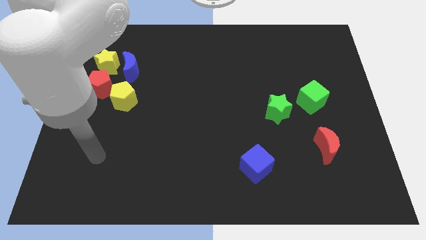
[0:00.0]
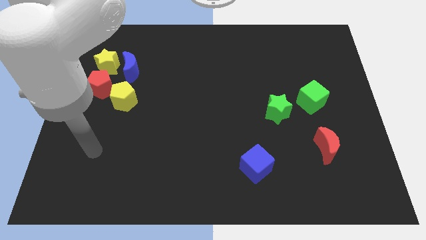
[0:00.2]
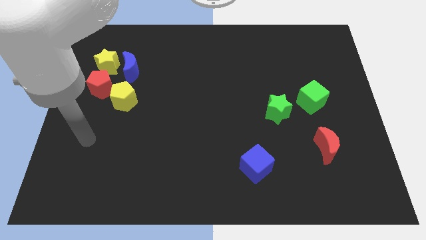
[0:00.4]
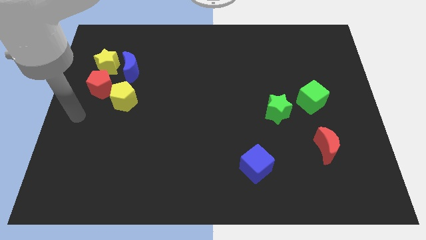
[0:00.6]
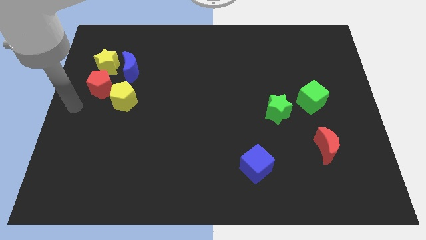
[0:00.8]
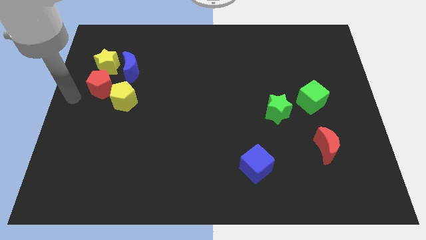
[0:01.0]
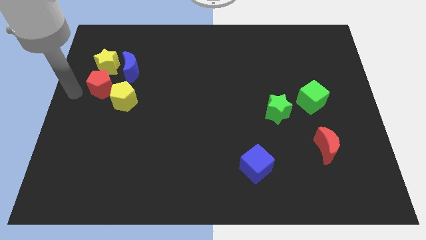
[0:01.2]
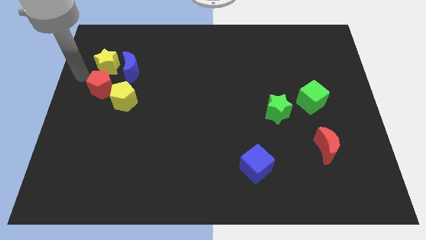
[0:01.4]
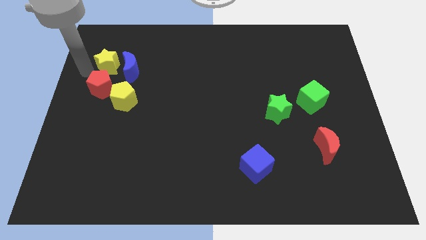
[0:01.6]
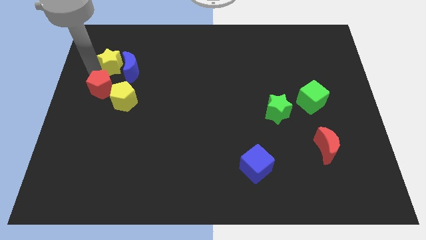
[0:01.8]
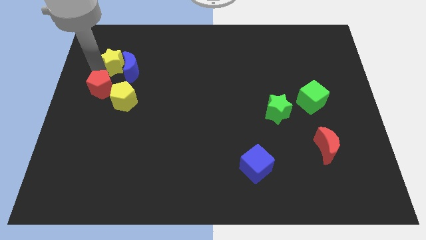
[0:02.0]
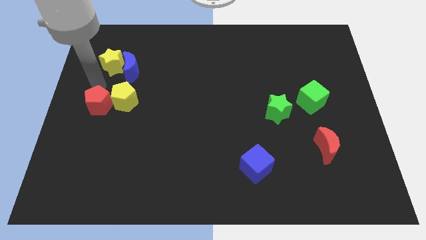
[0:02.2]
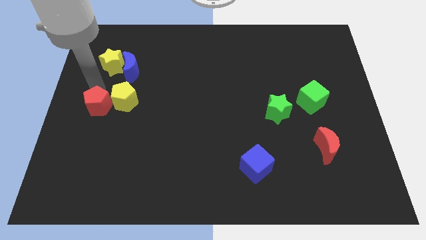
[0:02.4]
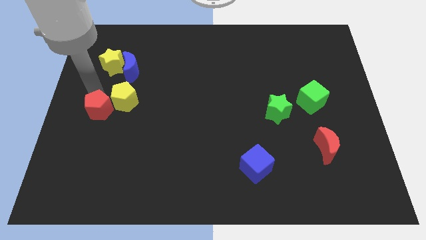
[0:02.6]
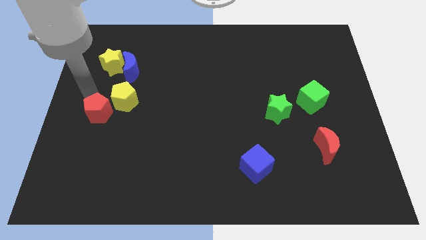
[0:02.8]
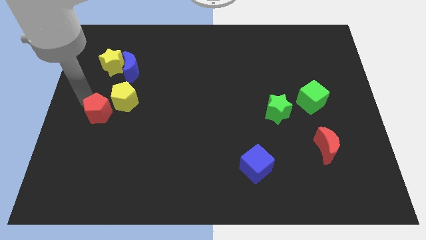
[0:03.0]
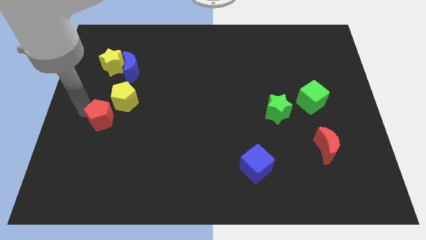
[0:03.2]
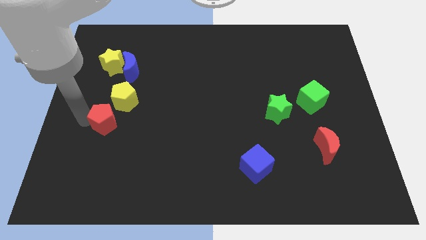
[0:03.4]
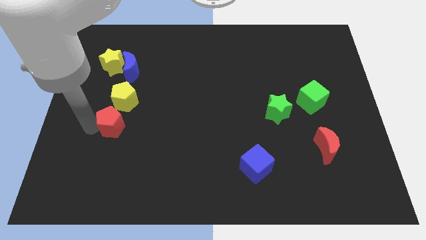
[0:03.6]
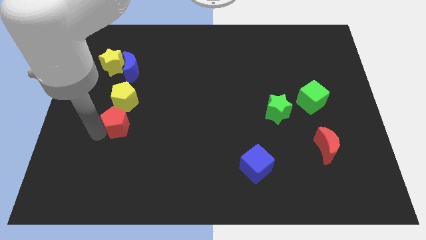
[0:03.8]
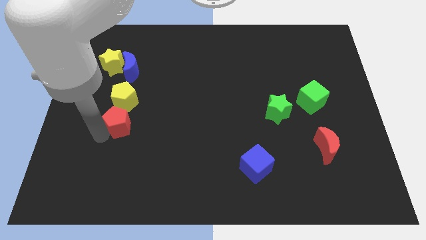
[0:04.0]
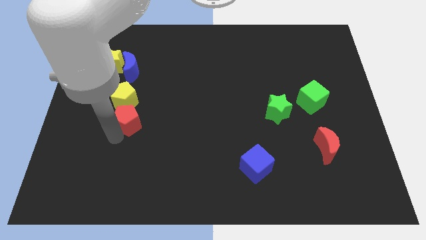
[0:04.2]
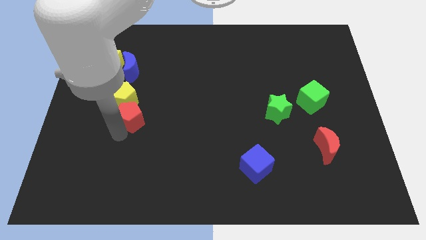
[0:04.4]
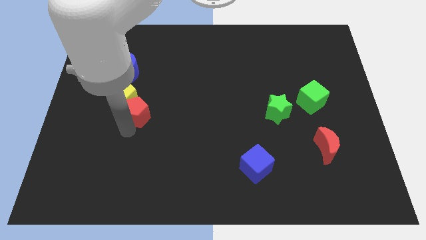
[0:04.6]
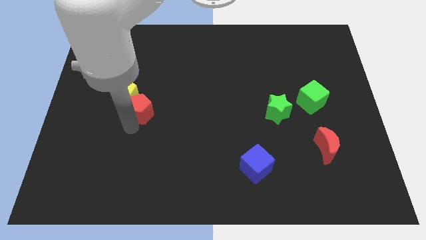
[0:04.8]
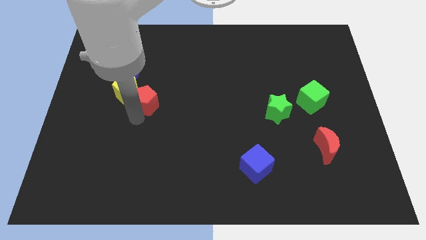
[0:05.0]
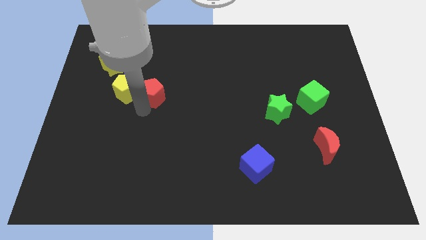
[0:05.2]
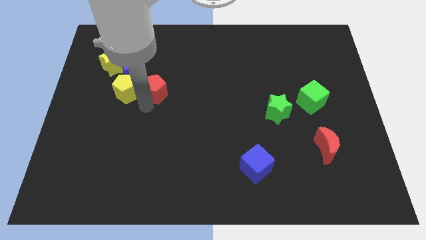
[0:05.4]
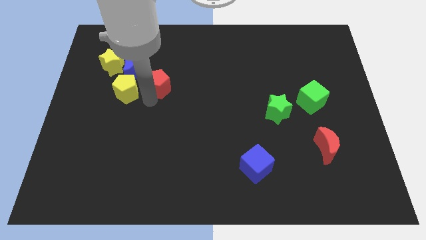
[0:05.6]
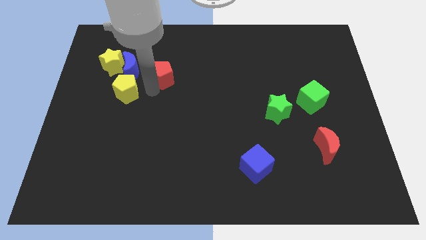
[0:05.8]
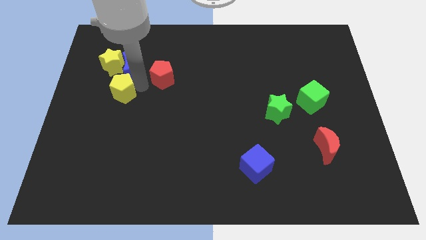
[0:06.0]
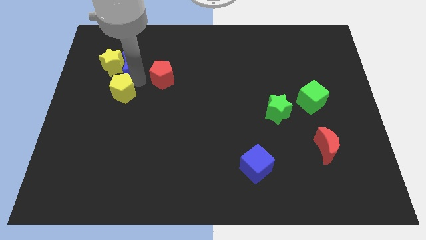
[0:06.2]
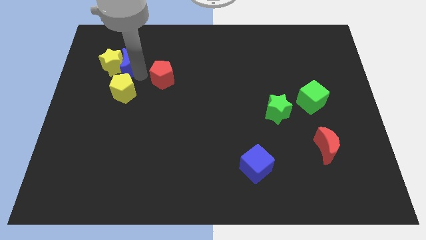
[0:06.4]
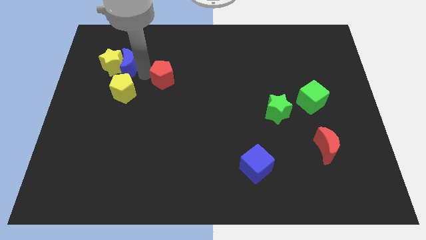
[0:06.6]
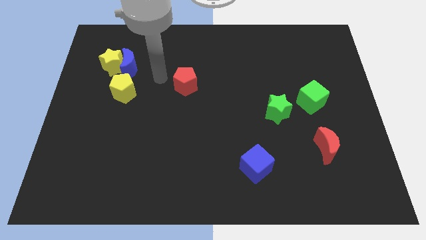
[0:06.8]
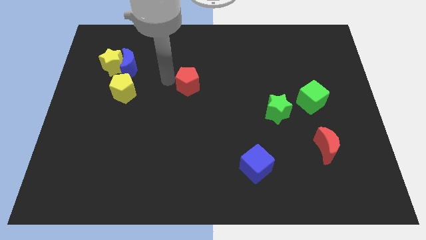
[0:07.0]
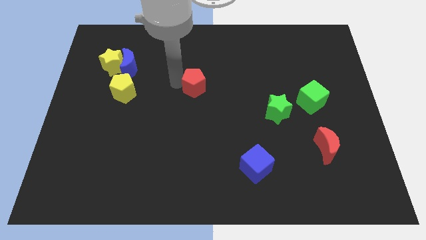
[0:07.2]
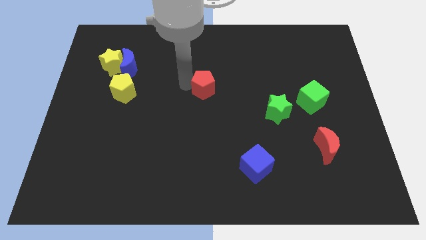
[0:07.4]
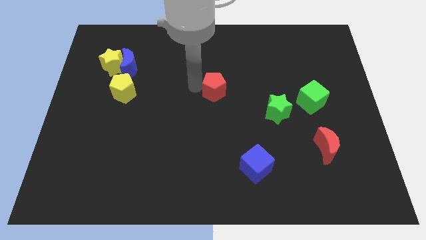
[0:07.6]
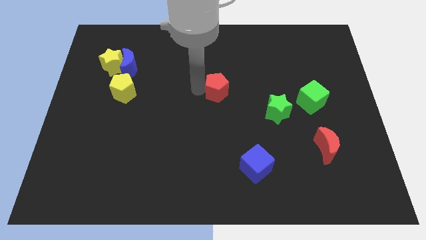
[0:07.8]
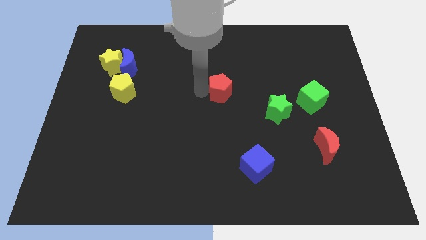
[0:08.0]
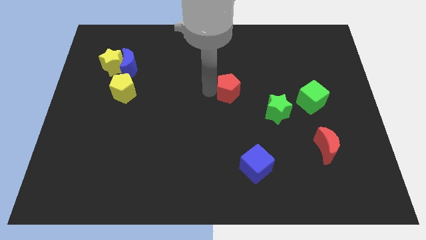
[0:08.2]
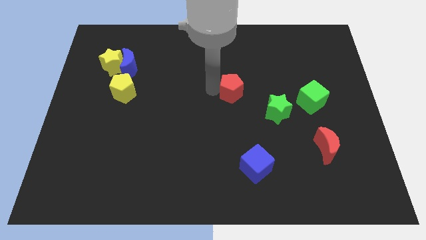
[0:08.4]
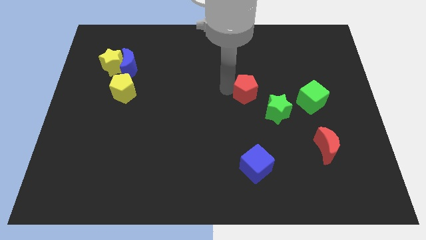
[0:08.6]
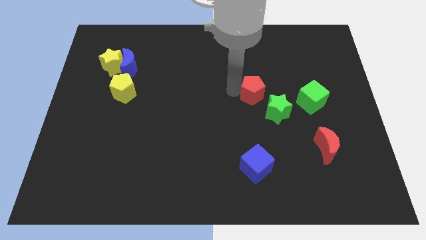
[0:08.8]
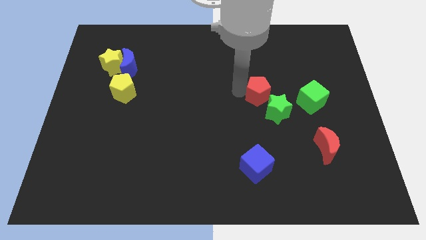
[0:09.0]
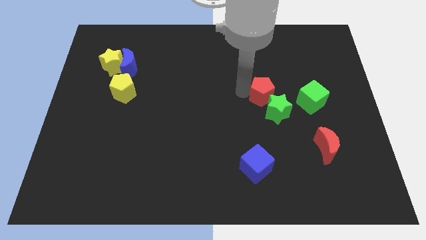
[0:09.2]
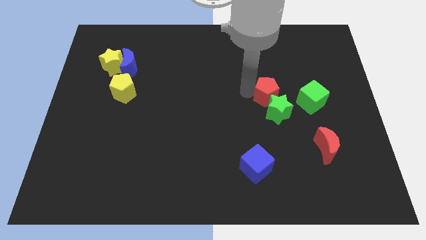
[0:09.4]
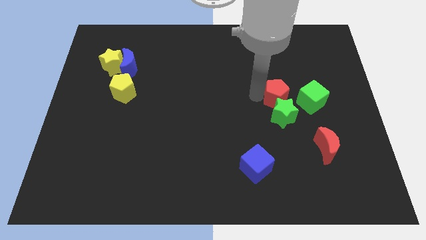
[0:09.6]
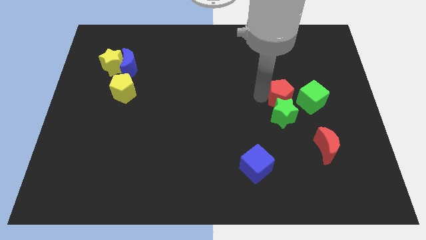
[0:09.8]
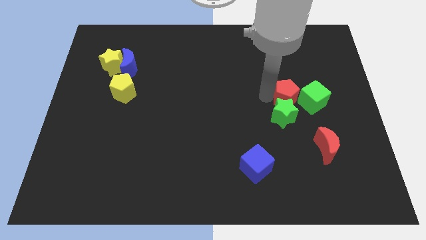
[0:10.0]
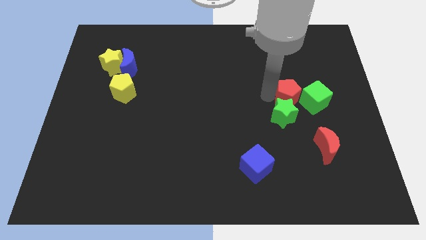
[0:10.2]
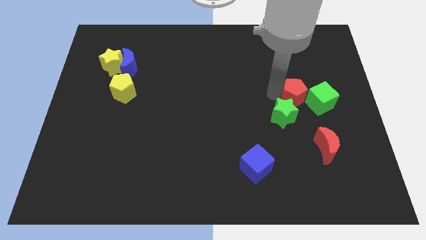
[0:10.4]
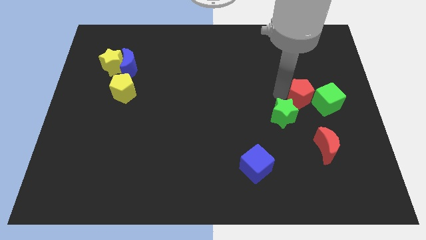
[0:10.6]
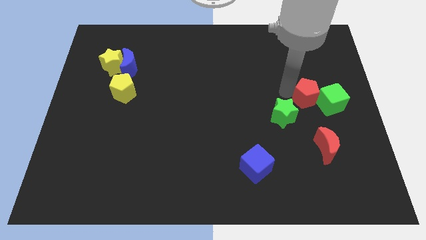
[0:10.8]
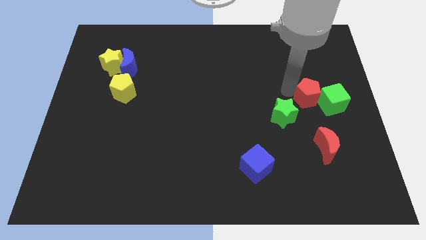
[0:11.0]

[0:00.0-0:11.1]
push the red pentagon next to the green cube

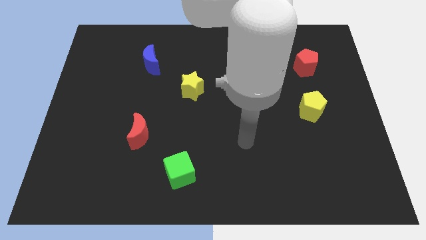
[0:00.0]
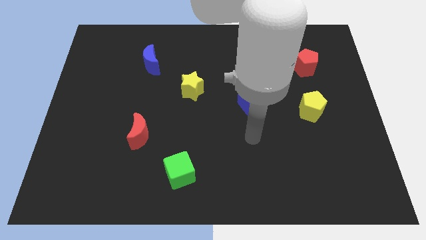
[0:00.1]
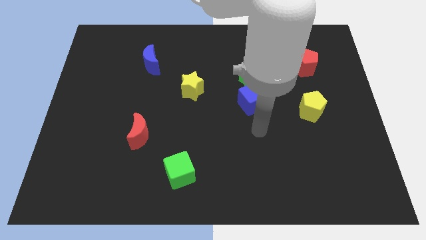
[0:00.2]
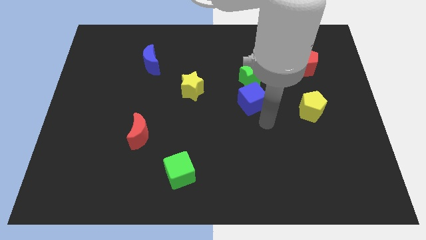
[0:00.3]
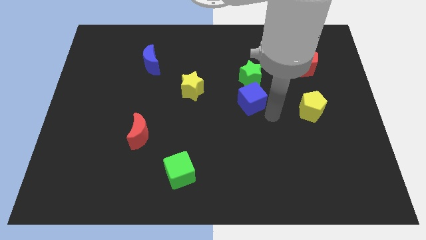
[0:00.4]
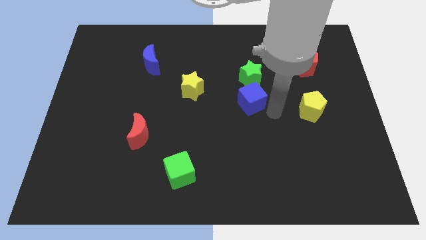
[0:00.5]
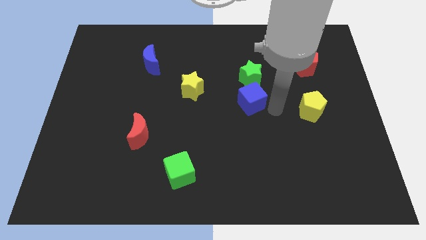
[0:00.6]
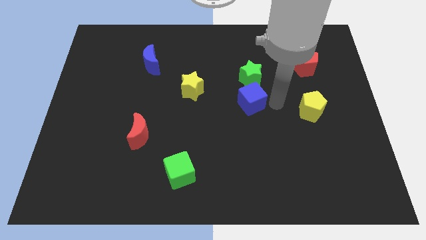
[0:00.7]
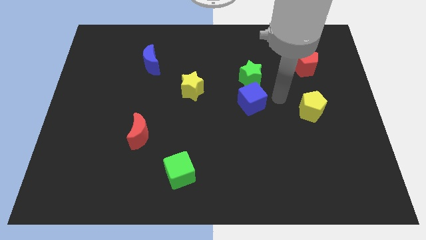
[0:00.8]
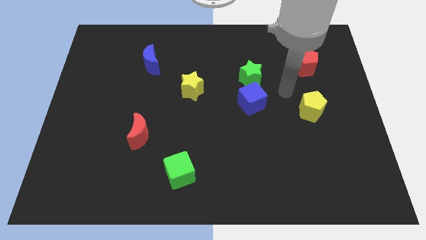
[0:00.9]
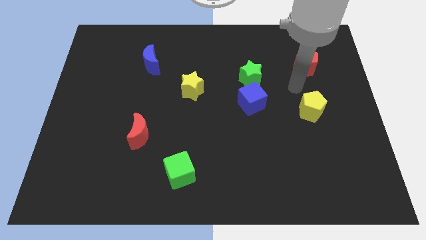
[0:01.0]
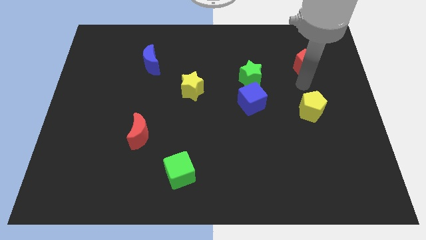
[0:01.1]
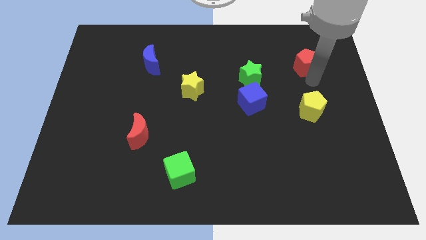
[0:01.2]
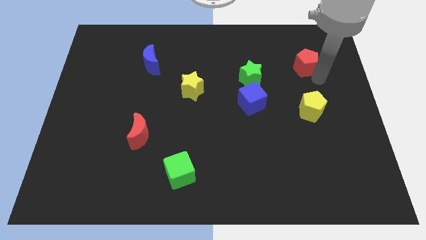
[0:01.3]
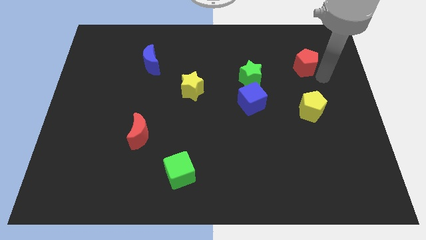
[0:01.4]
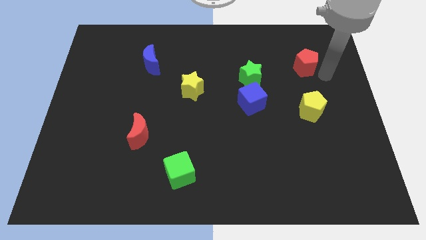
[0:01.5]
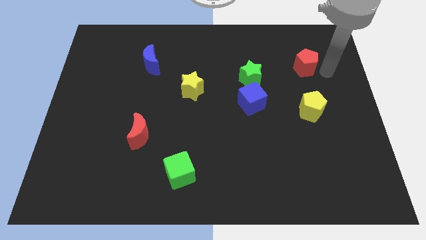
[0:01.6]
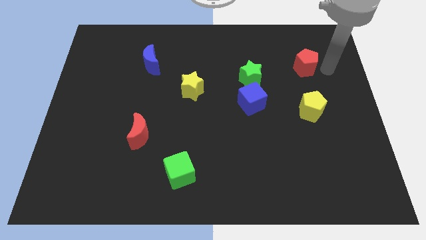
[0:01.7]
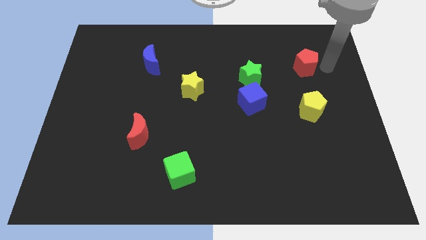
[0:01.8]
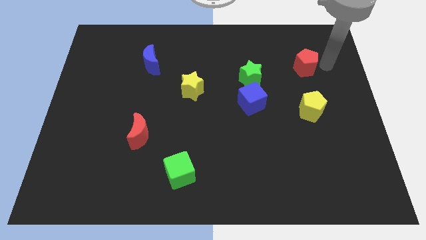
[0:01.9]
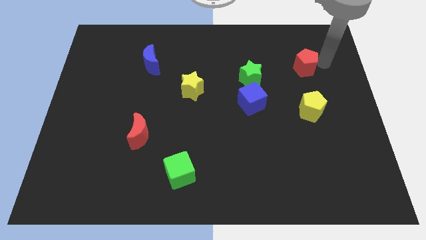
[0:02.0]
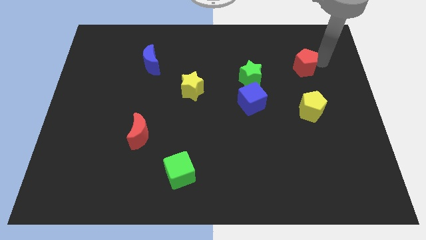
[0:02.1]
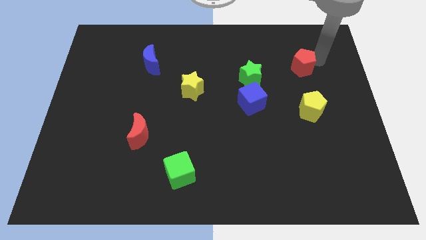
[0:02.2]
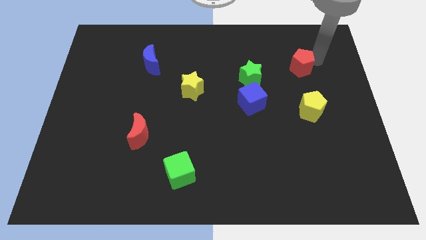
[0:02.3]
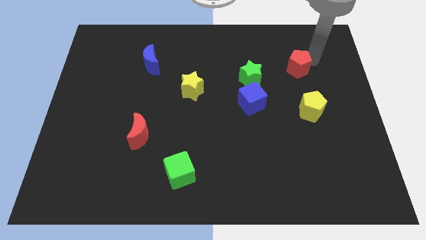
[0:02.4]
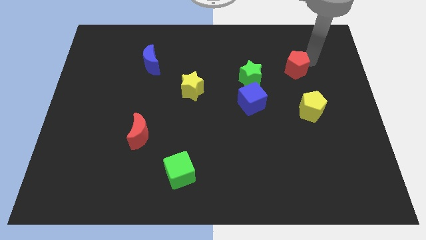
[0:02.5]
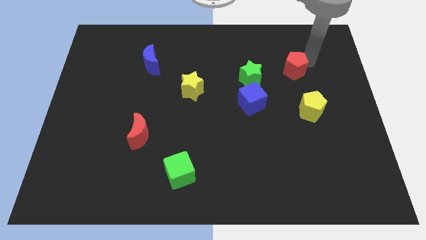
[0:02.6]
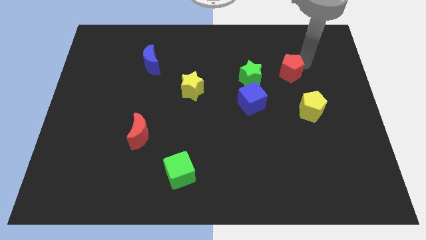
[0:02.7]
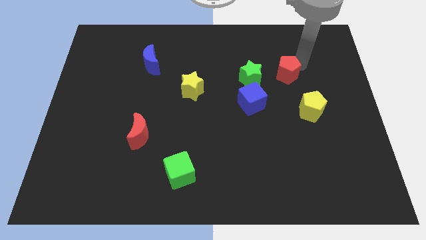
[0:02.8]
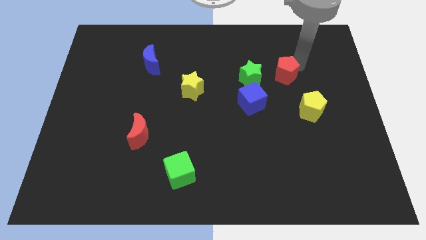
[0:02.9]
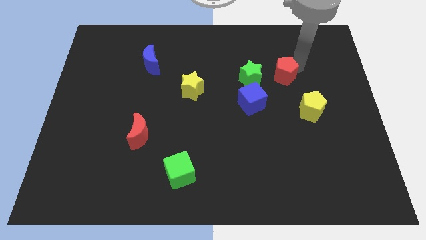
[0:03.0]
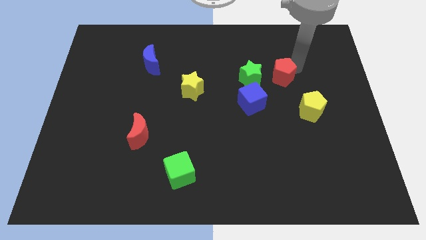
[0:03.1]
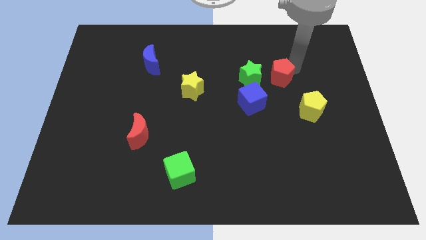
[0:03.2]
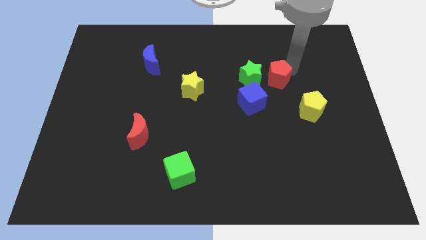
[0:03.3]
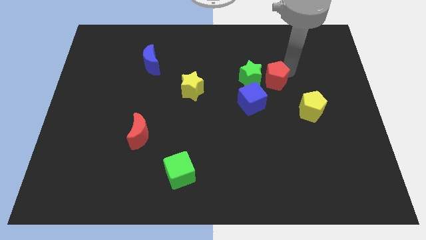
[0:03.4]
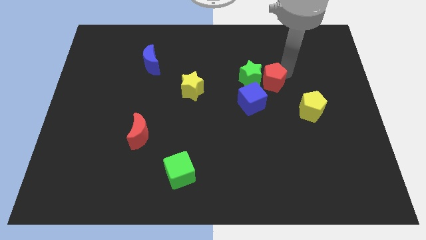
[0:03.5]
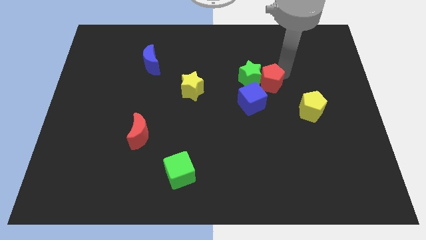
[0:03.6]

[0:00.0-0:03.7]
push the red pentagon to the green star
